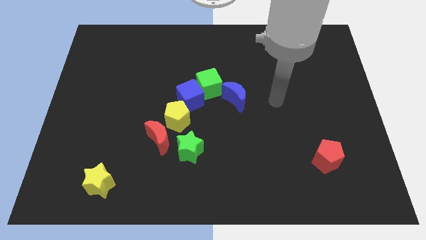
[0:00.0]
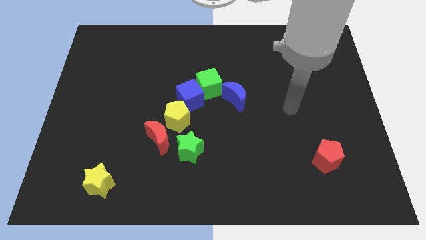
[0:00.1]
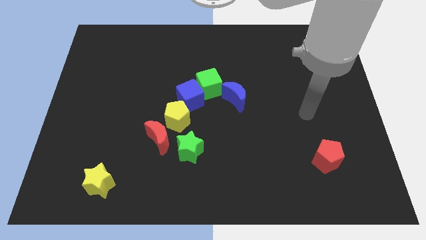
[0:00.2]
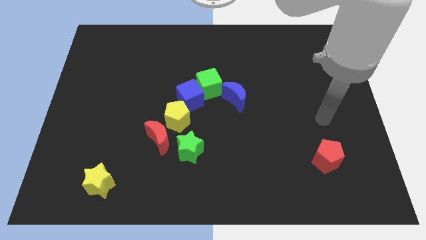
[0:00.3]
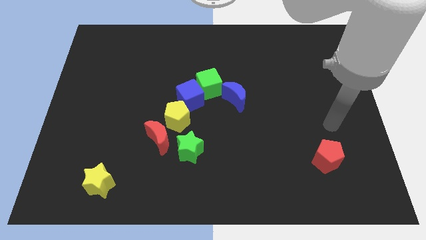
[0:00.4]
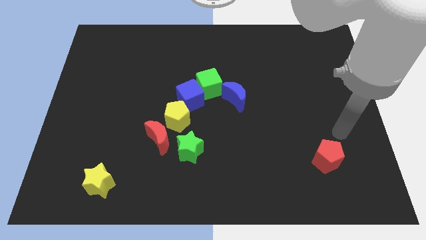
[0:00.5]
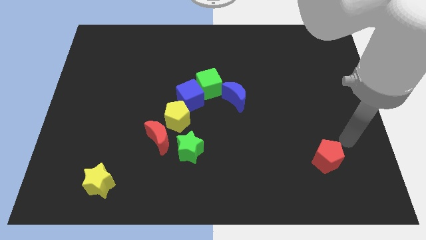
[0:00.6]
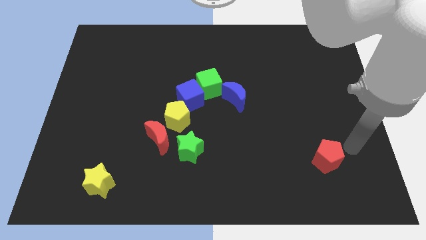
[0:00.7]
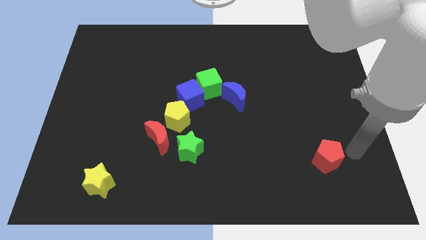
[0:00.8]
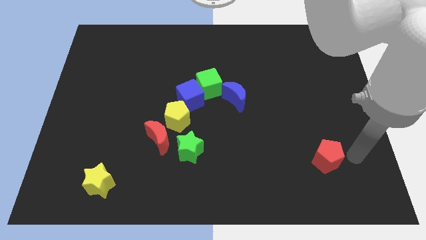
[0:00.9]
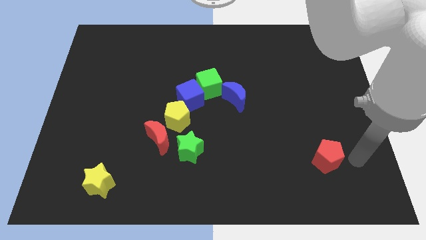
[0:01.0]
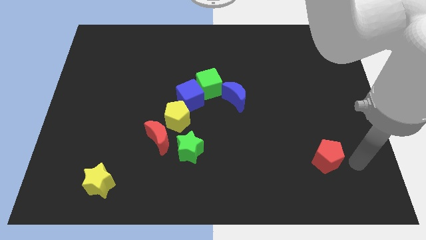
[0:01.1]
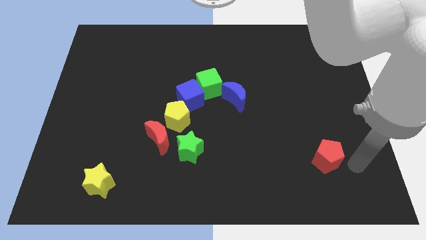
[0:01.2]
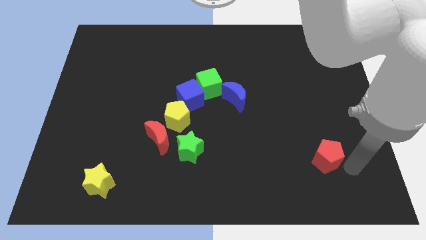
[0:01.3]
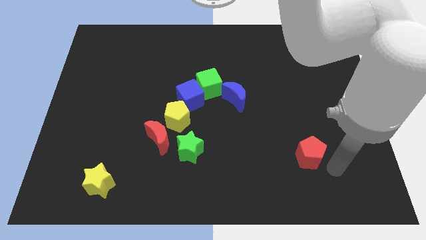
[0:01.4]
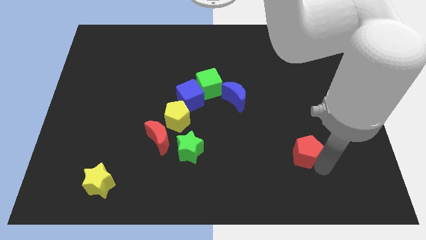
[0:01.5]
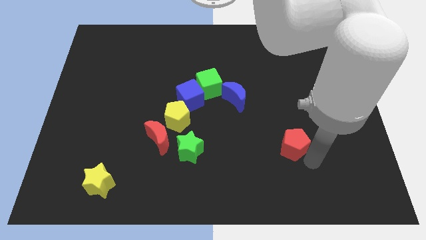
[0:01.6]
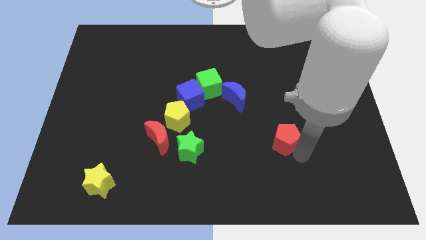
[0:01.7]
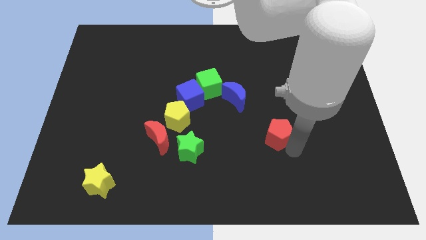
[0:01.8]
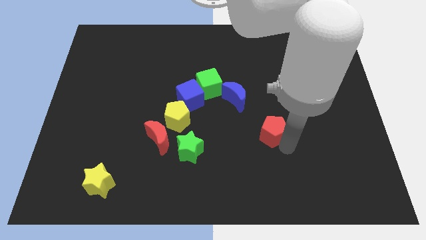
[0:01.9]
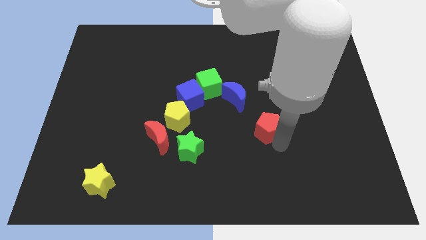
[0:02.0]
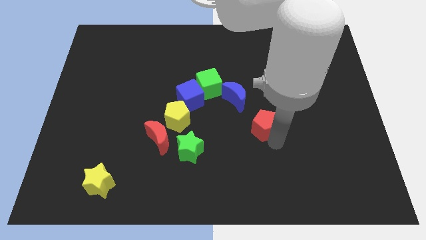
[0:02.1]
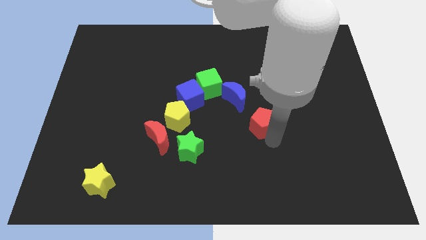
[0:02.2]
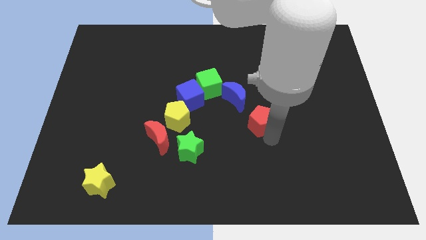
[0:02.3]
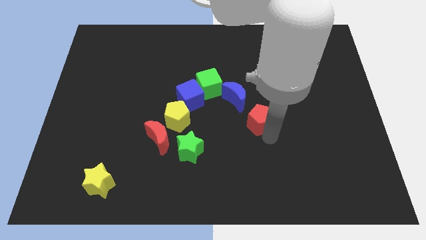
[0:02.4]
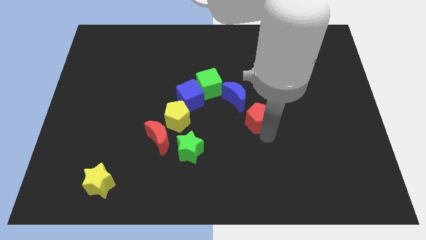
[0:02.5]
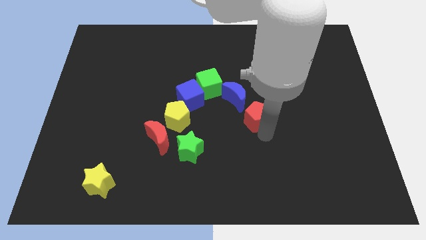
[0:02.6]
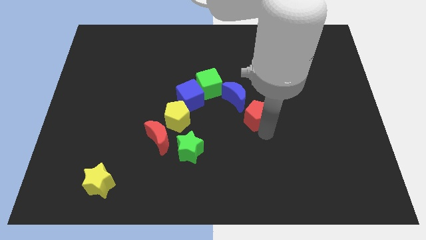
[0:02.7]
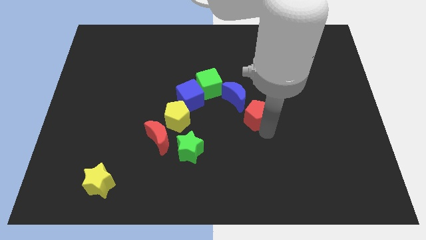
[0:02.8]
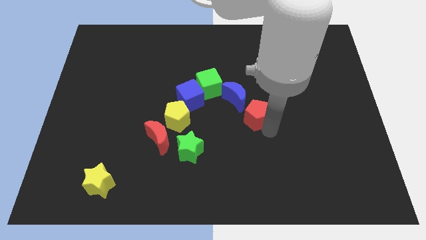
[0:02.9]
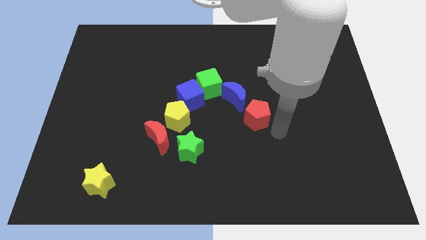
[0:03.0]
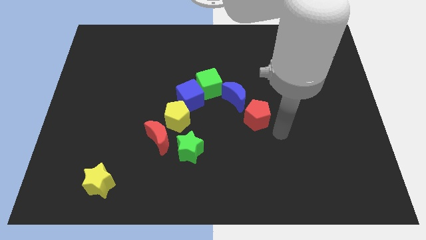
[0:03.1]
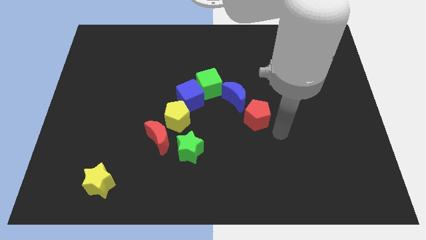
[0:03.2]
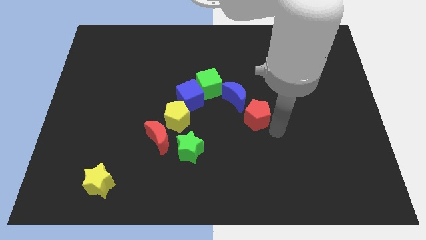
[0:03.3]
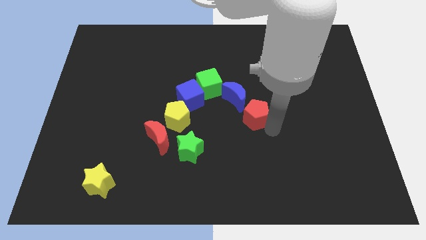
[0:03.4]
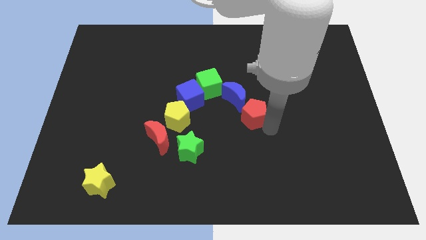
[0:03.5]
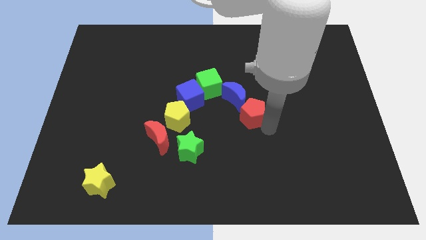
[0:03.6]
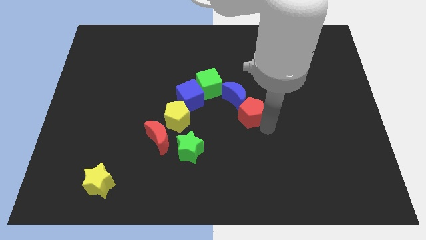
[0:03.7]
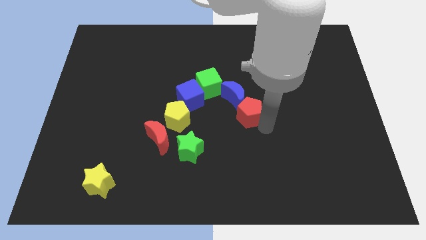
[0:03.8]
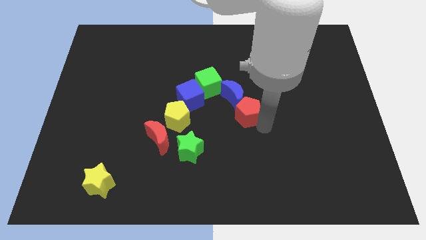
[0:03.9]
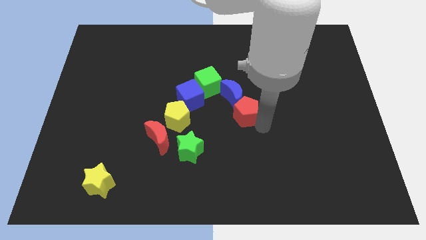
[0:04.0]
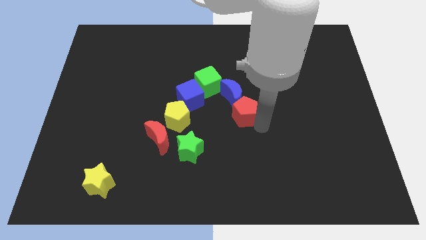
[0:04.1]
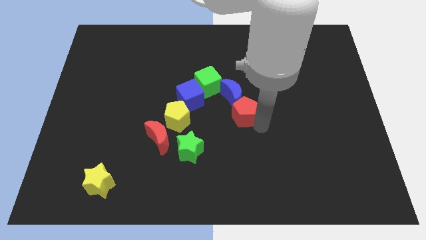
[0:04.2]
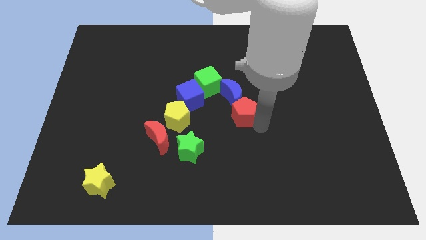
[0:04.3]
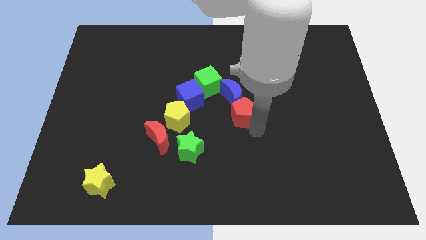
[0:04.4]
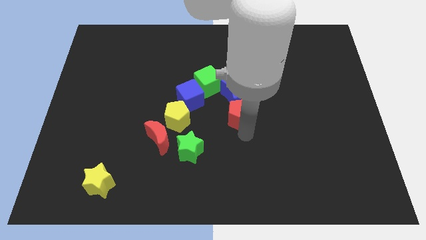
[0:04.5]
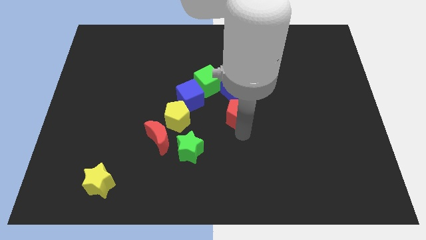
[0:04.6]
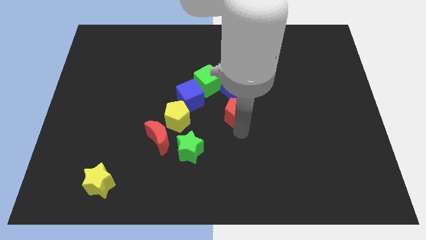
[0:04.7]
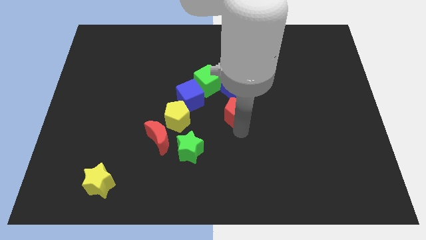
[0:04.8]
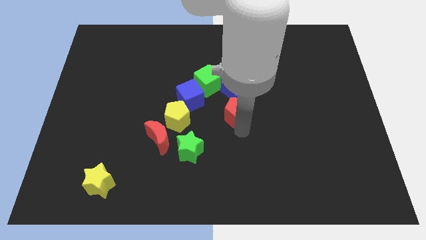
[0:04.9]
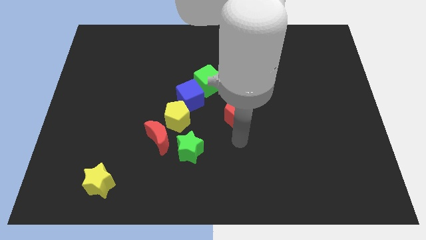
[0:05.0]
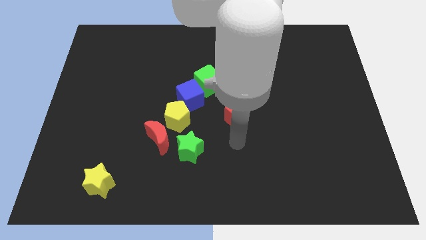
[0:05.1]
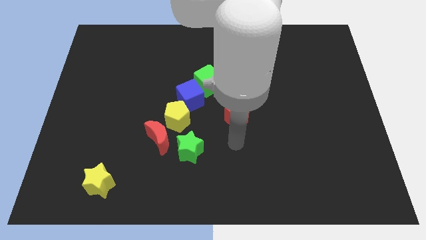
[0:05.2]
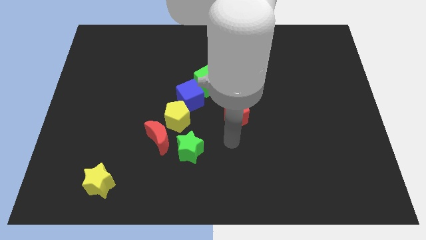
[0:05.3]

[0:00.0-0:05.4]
add the red pentagon to the group of blocks

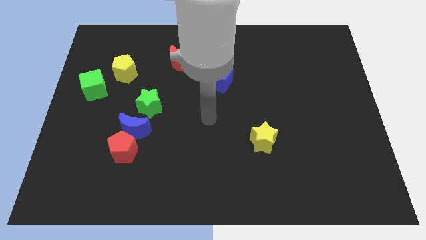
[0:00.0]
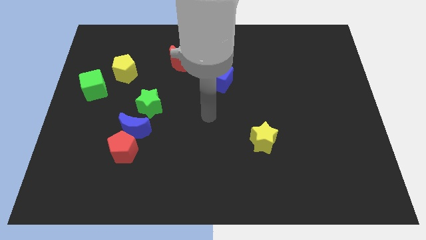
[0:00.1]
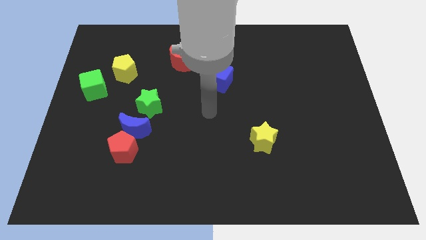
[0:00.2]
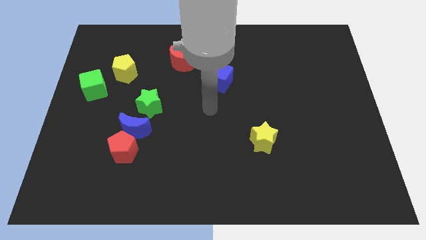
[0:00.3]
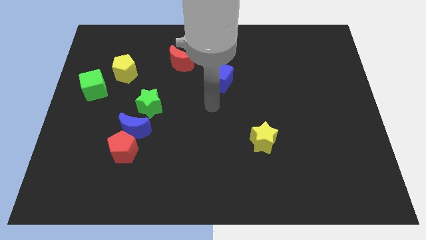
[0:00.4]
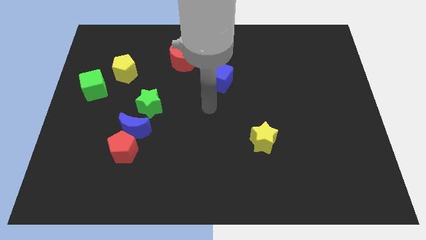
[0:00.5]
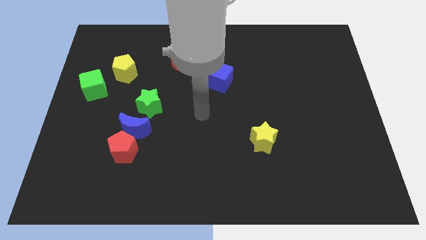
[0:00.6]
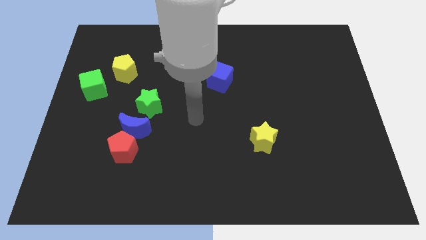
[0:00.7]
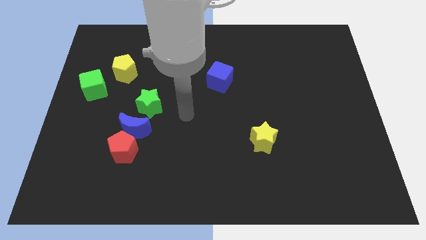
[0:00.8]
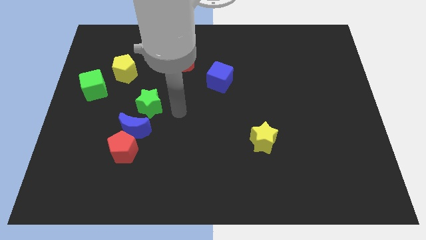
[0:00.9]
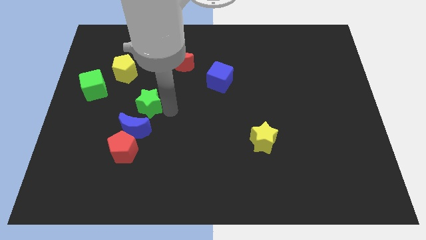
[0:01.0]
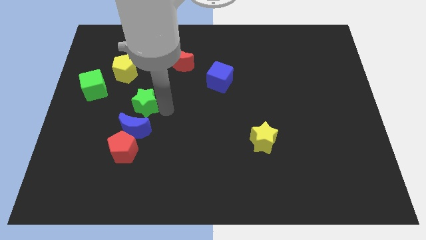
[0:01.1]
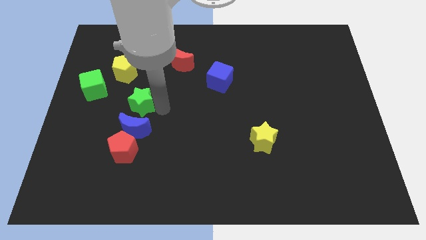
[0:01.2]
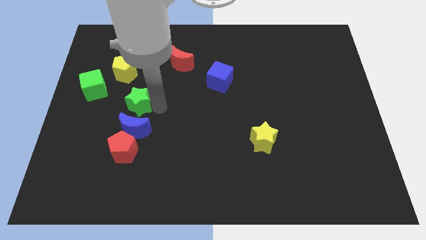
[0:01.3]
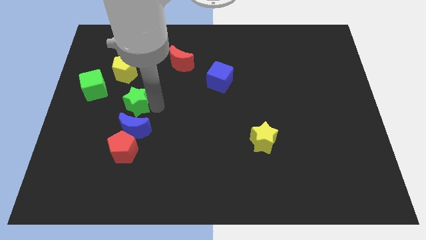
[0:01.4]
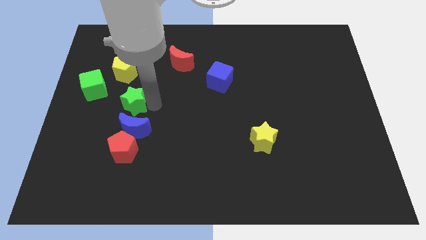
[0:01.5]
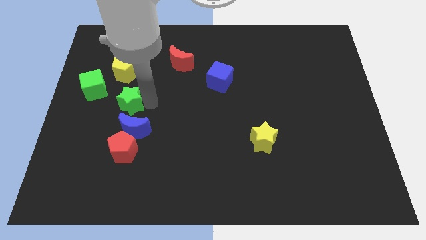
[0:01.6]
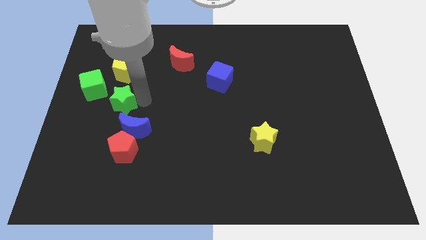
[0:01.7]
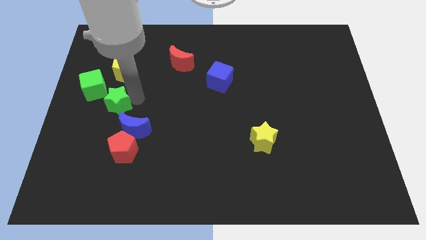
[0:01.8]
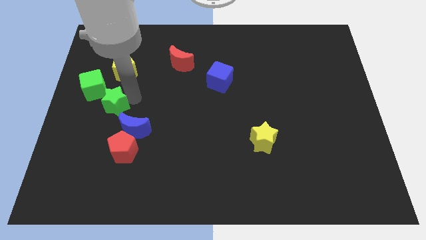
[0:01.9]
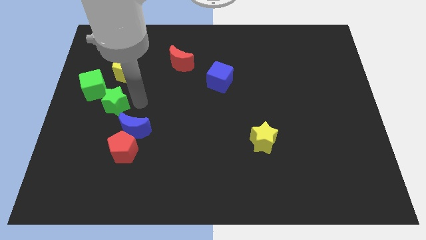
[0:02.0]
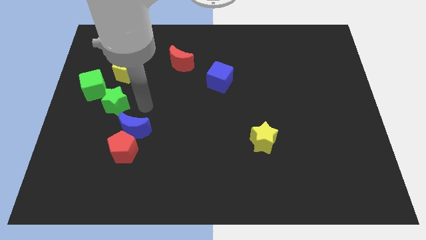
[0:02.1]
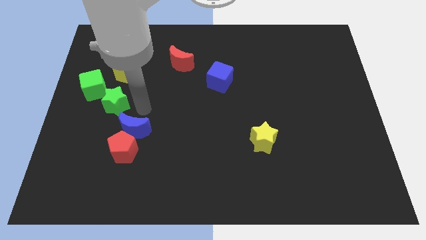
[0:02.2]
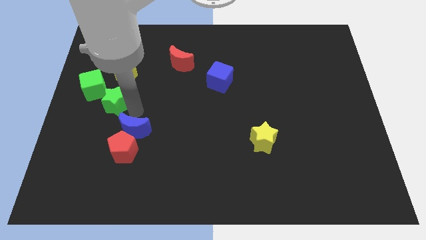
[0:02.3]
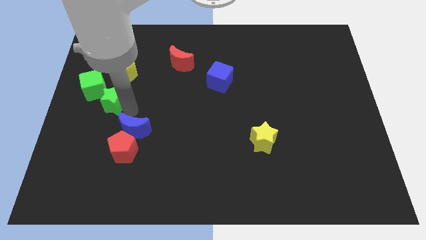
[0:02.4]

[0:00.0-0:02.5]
move the green star to the bottom of the green cube

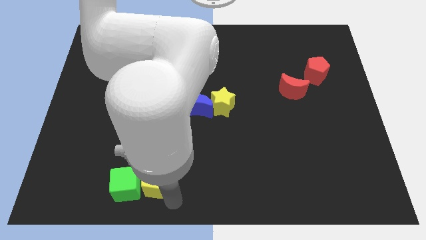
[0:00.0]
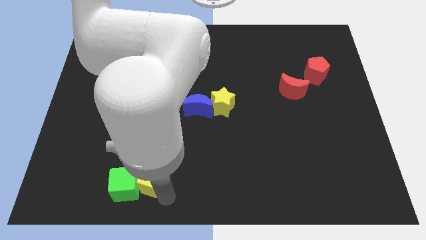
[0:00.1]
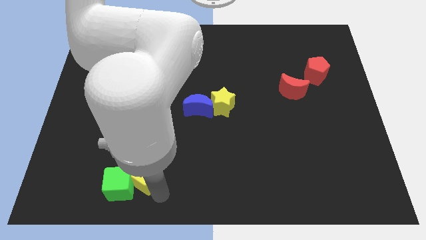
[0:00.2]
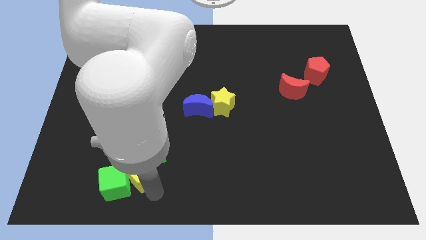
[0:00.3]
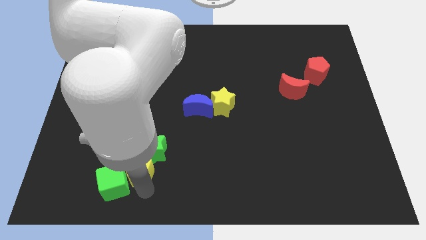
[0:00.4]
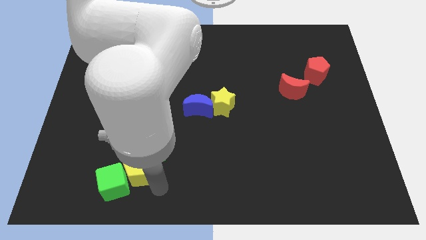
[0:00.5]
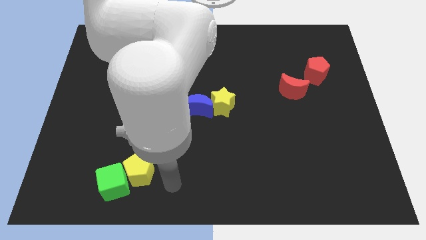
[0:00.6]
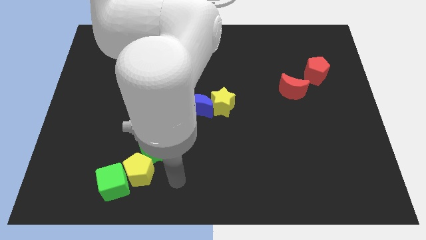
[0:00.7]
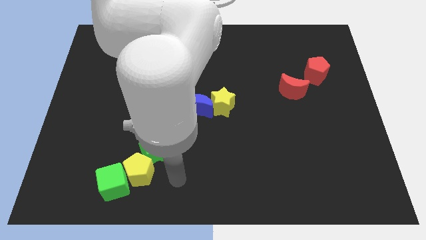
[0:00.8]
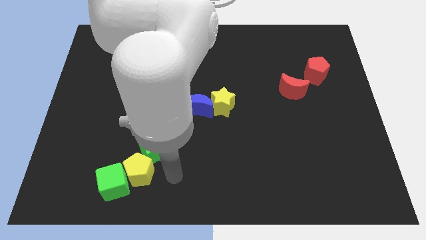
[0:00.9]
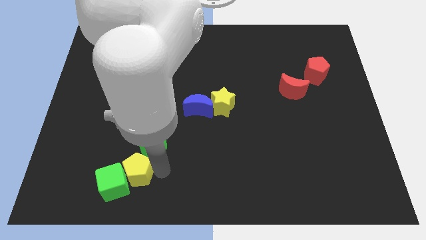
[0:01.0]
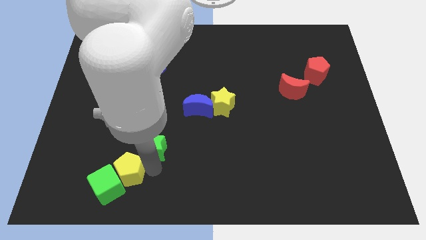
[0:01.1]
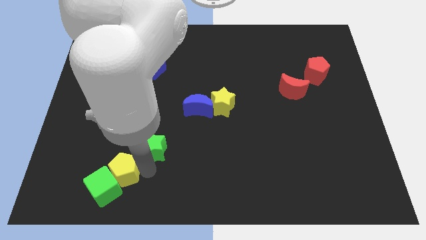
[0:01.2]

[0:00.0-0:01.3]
place the yellow pentagon in between two green blocks
